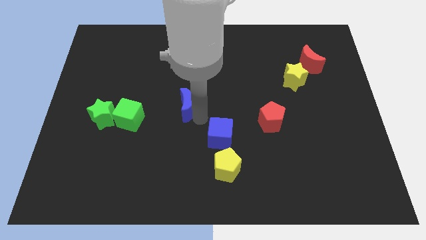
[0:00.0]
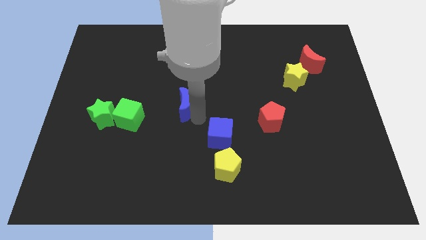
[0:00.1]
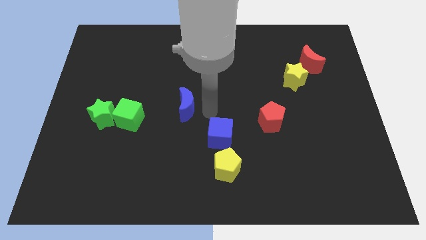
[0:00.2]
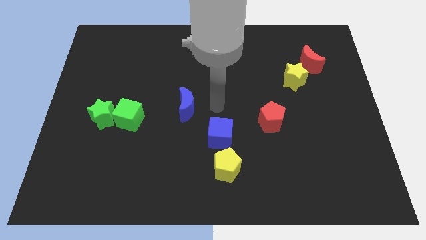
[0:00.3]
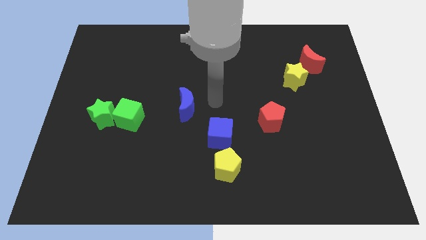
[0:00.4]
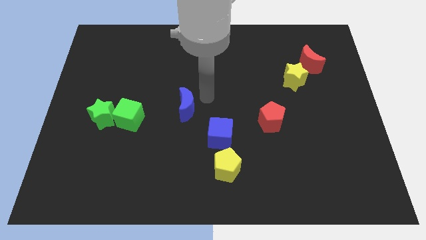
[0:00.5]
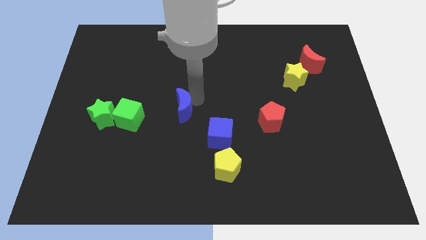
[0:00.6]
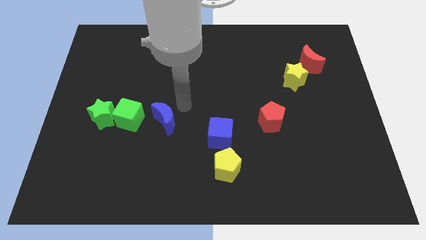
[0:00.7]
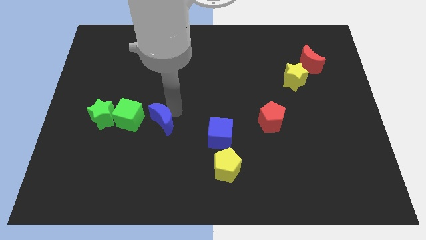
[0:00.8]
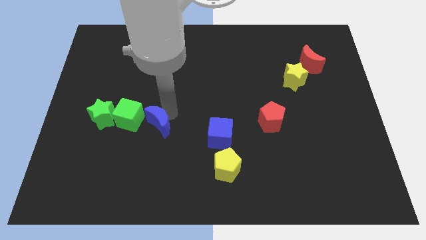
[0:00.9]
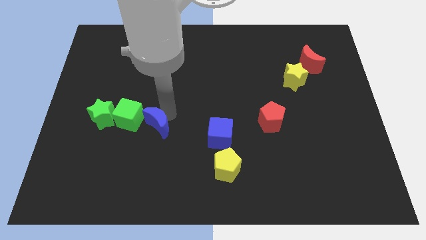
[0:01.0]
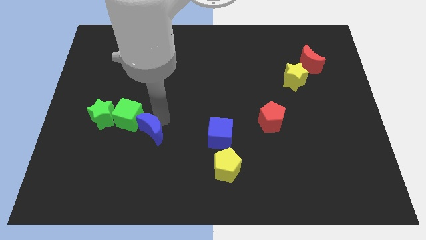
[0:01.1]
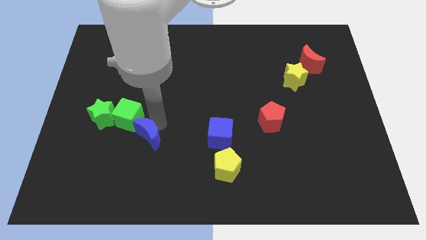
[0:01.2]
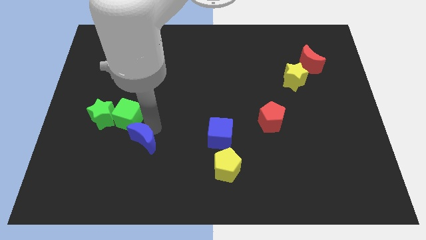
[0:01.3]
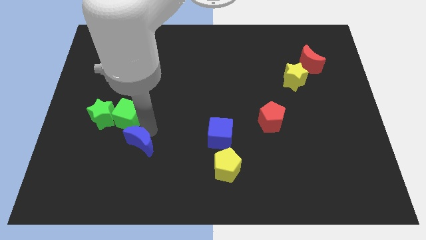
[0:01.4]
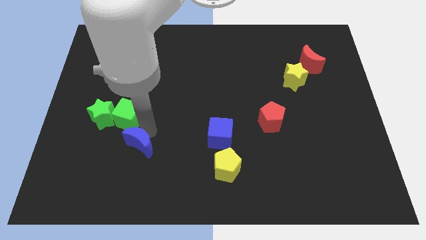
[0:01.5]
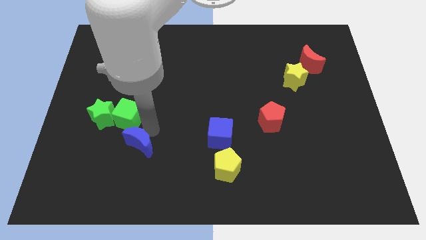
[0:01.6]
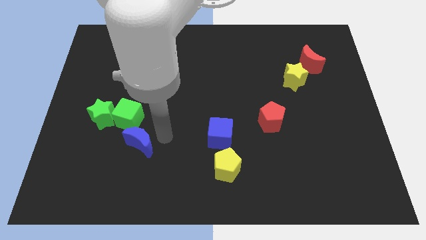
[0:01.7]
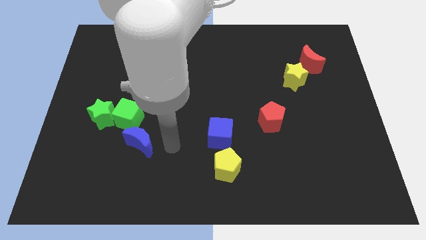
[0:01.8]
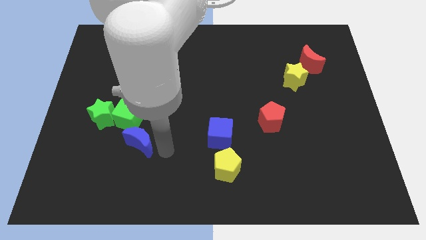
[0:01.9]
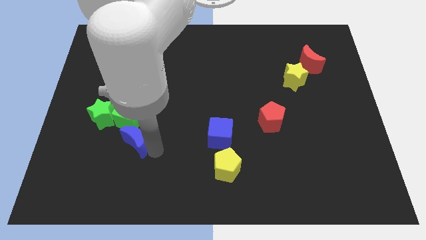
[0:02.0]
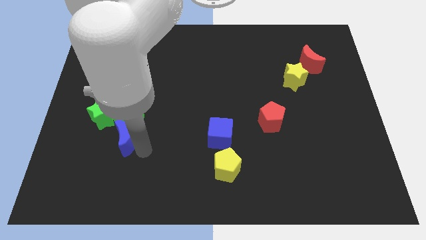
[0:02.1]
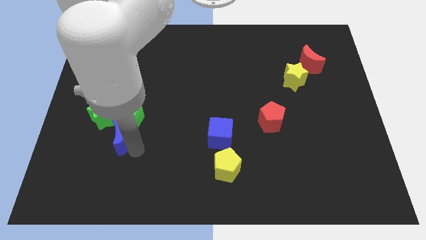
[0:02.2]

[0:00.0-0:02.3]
push the blue crescent to the bottom of the green cube

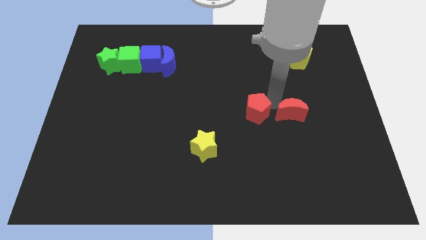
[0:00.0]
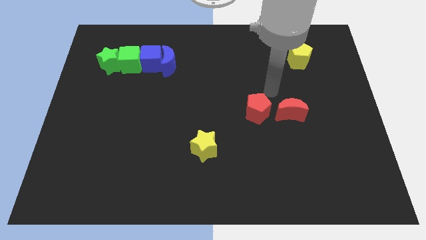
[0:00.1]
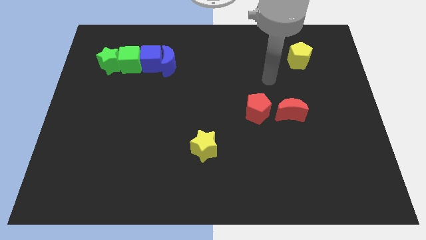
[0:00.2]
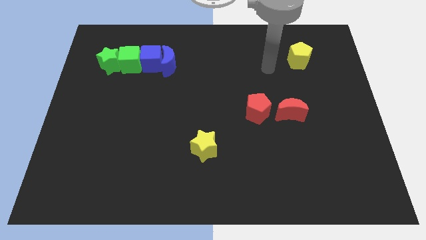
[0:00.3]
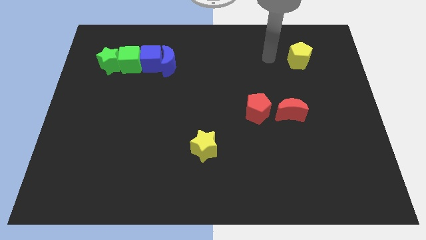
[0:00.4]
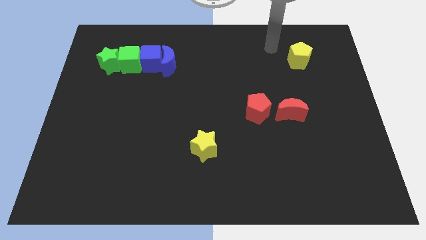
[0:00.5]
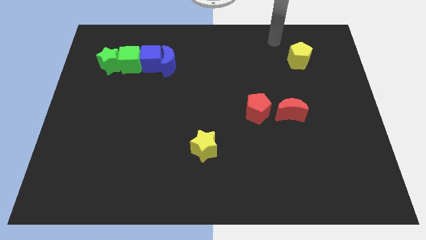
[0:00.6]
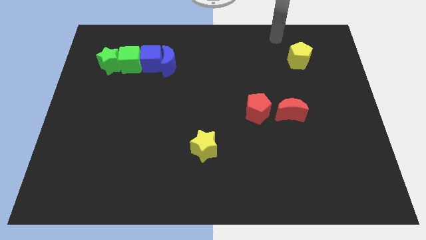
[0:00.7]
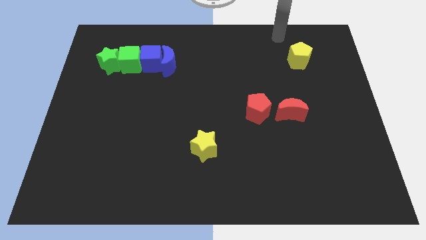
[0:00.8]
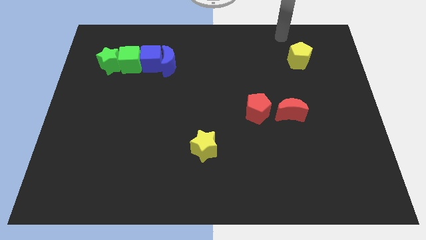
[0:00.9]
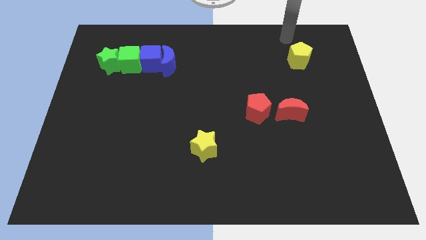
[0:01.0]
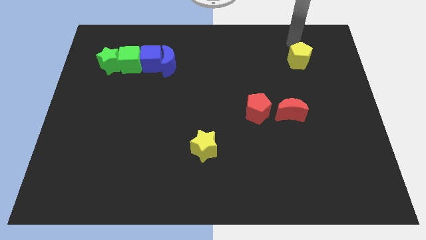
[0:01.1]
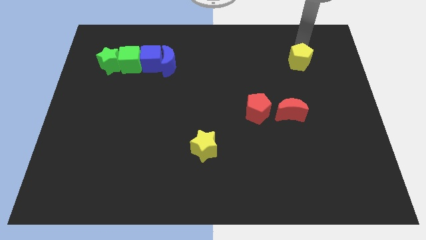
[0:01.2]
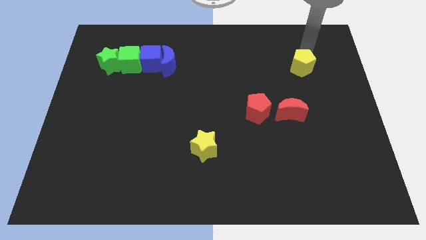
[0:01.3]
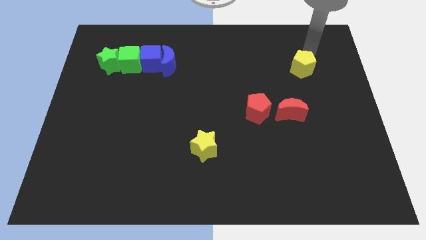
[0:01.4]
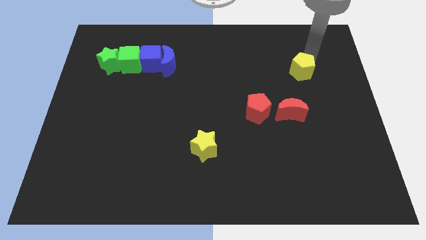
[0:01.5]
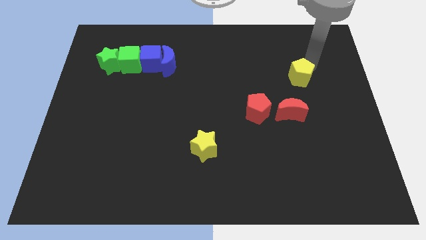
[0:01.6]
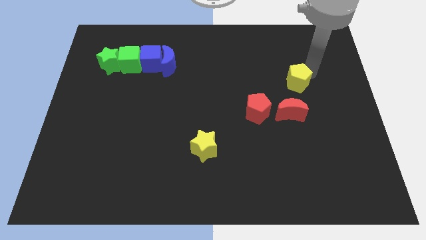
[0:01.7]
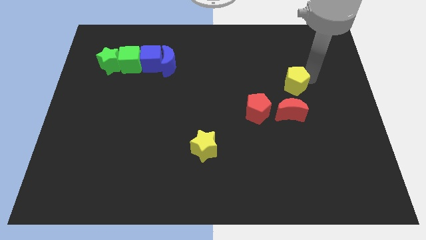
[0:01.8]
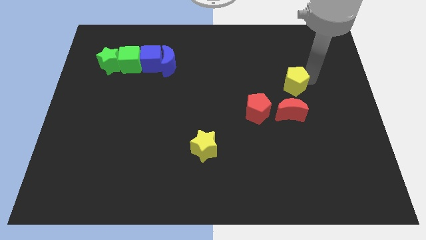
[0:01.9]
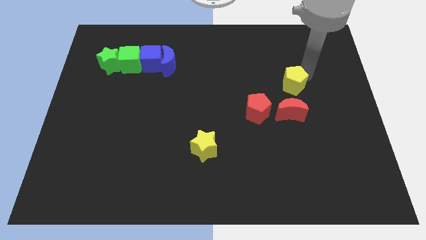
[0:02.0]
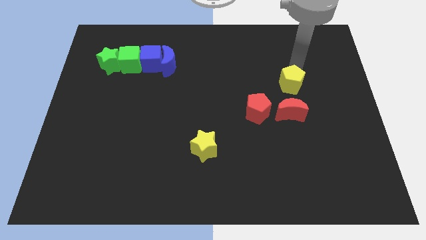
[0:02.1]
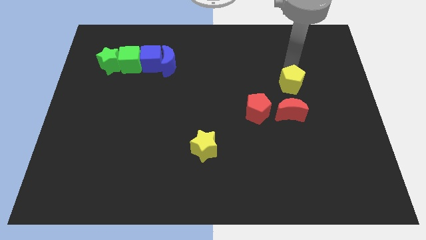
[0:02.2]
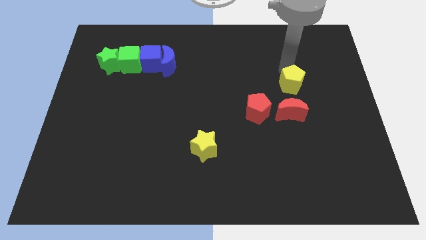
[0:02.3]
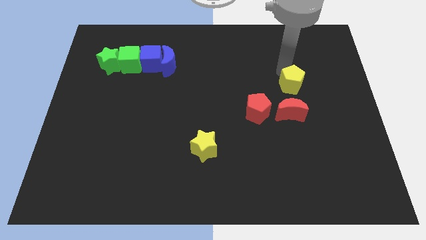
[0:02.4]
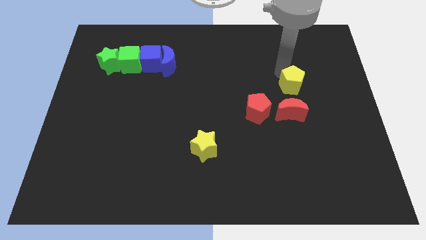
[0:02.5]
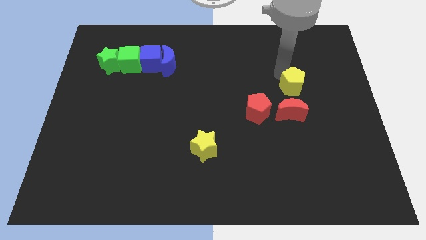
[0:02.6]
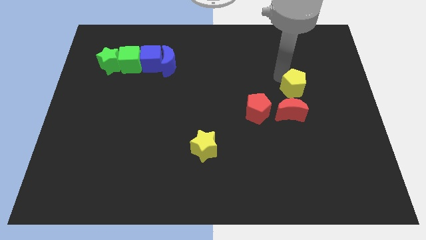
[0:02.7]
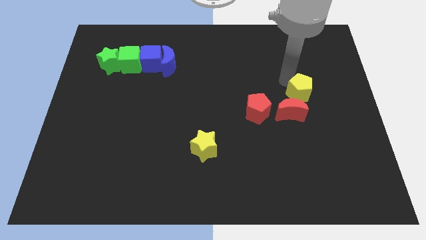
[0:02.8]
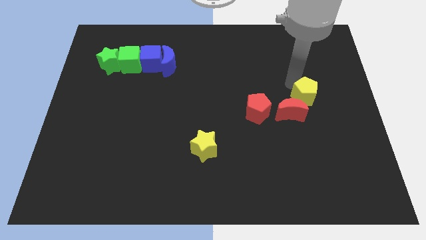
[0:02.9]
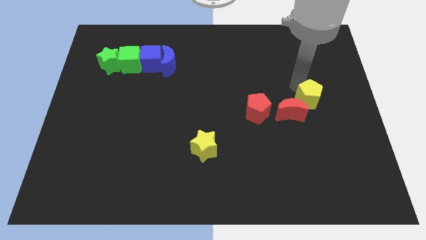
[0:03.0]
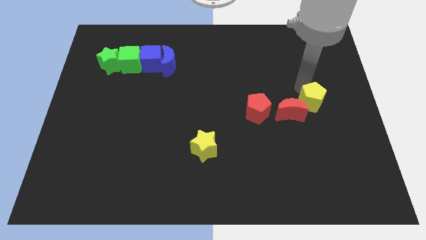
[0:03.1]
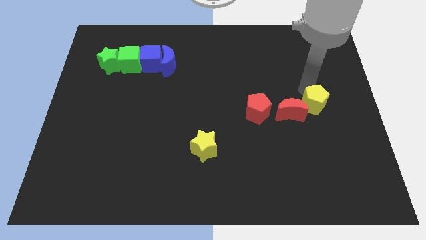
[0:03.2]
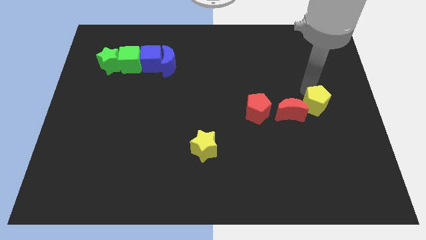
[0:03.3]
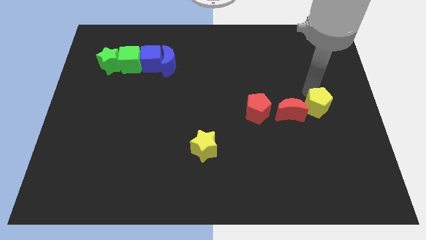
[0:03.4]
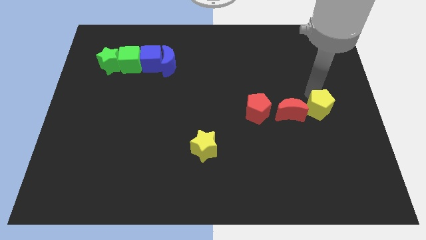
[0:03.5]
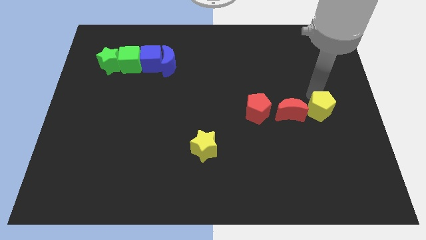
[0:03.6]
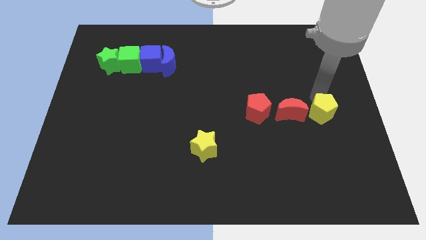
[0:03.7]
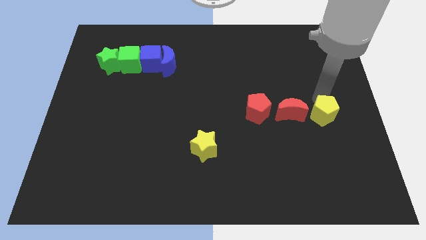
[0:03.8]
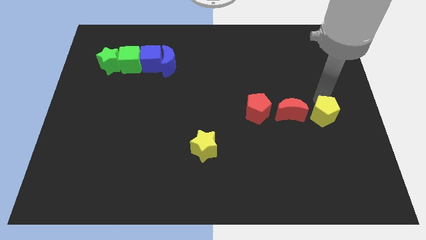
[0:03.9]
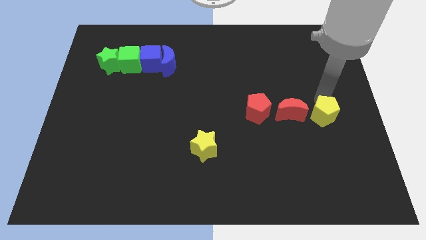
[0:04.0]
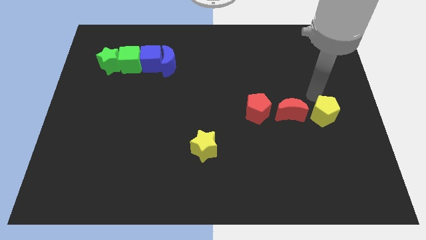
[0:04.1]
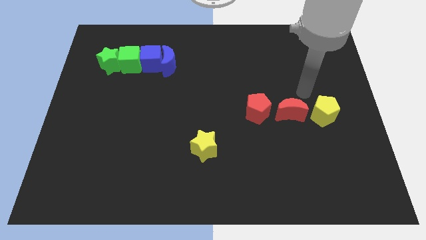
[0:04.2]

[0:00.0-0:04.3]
move the yellow pentagon to the right of red moon

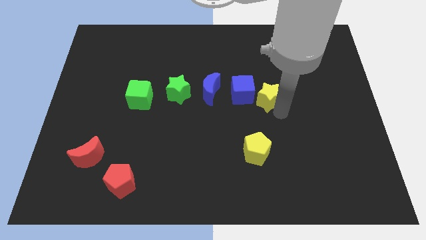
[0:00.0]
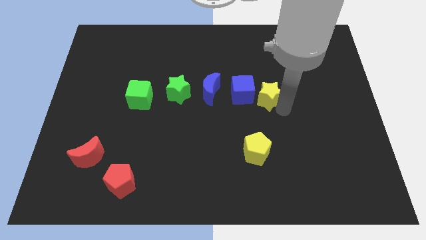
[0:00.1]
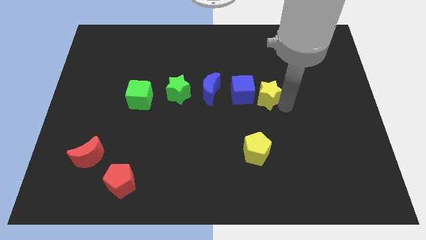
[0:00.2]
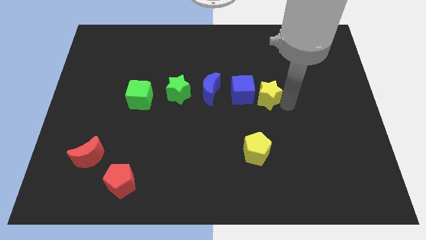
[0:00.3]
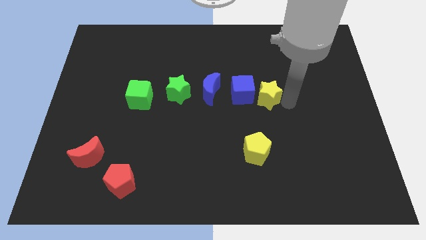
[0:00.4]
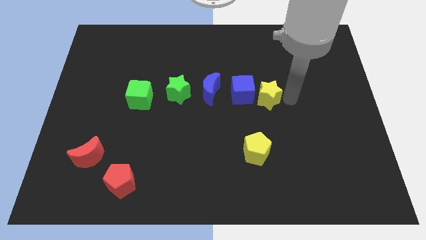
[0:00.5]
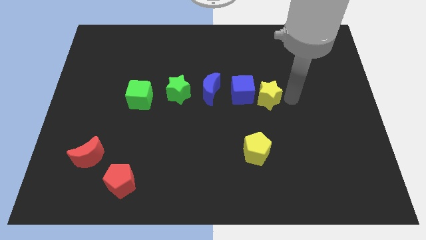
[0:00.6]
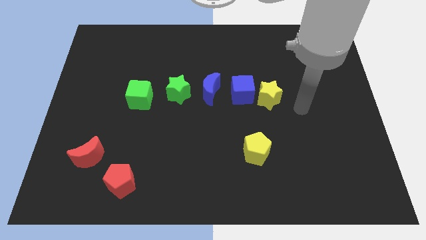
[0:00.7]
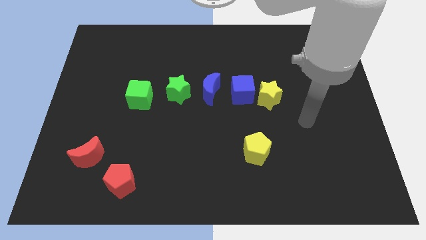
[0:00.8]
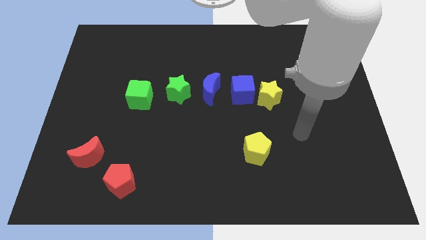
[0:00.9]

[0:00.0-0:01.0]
slightly touch the yellow star

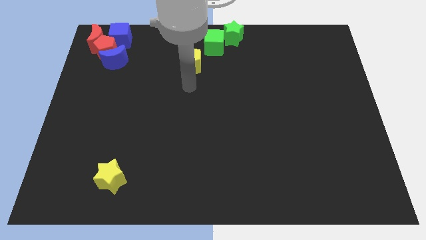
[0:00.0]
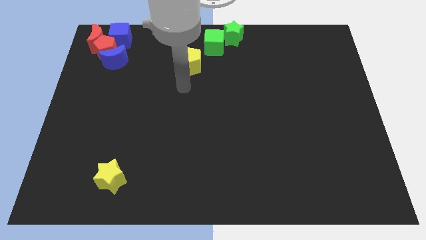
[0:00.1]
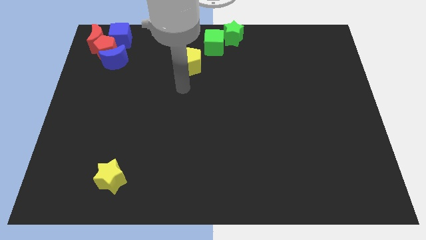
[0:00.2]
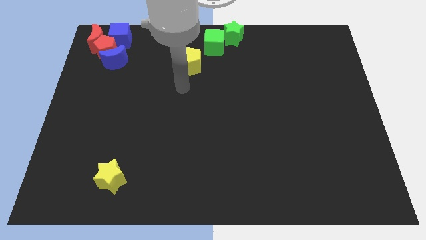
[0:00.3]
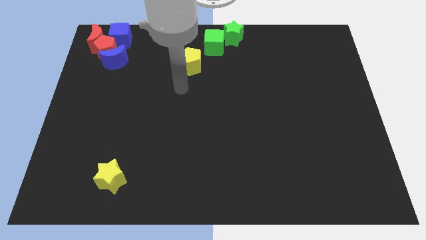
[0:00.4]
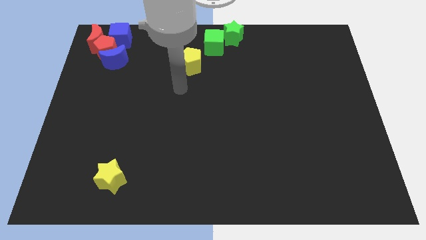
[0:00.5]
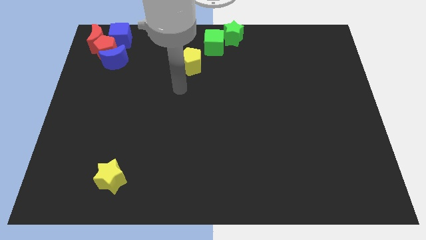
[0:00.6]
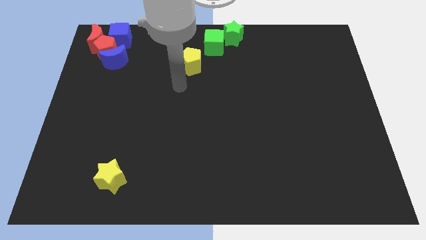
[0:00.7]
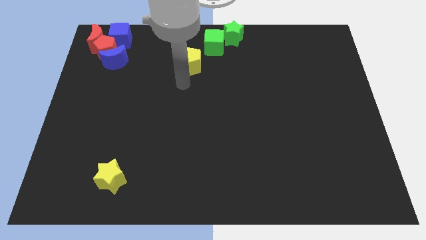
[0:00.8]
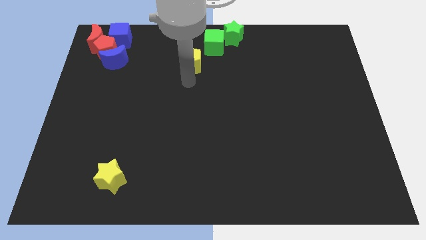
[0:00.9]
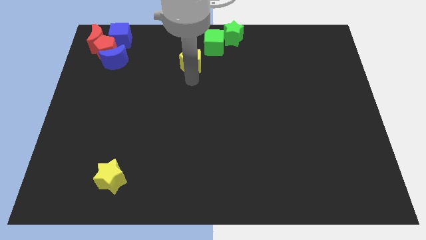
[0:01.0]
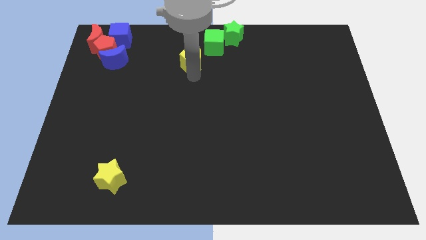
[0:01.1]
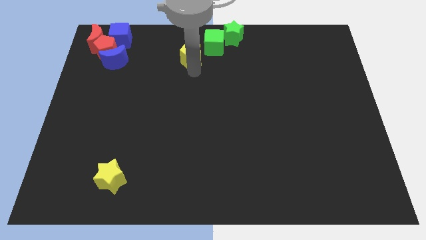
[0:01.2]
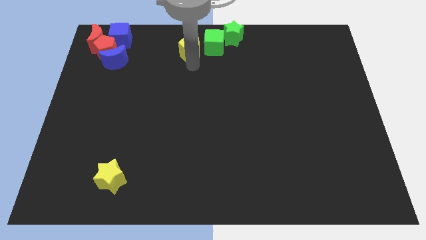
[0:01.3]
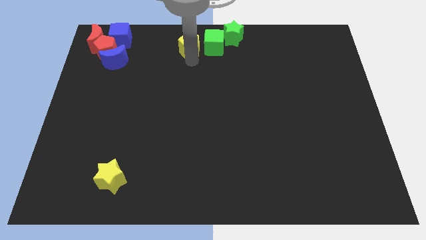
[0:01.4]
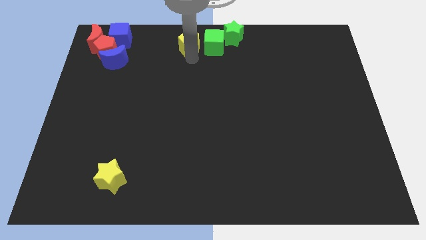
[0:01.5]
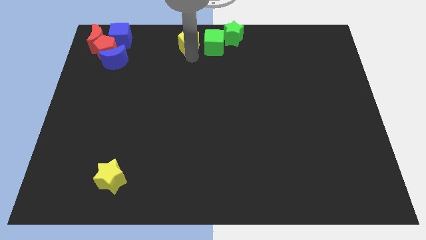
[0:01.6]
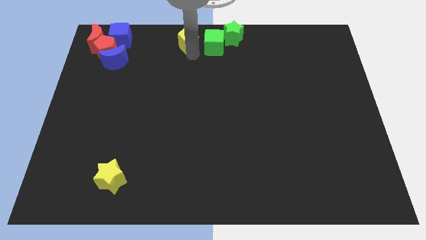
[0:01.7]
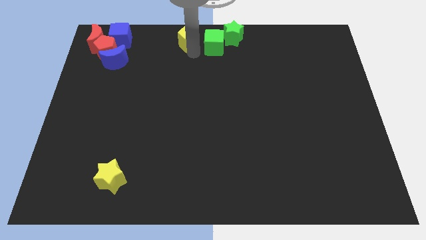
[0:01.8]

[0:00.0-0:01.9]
push the yellow pentagon upwards
